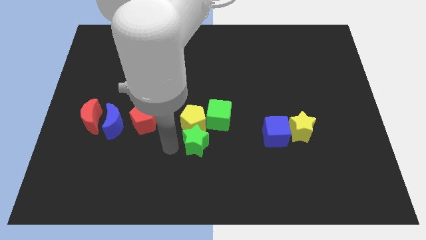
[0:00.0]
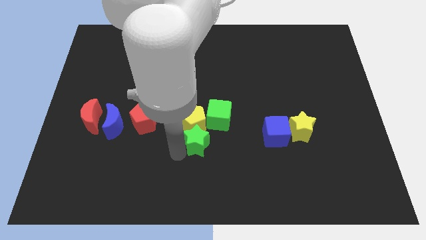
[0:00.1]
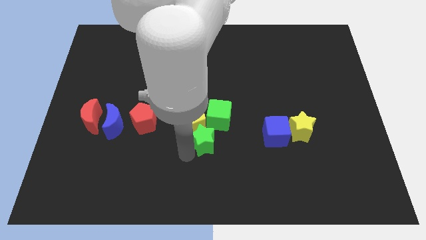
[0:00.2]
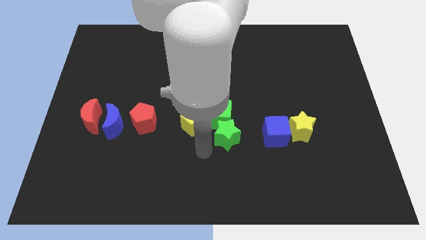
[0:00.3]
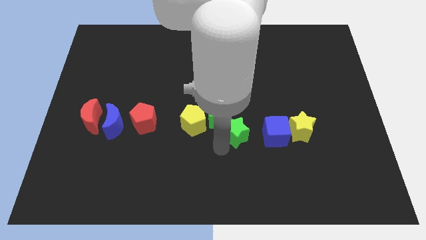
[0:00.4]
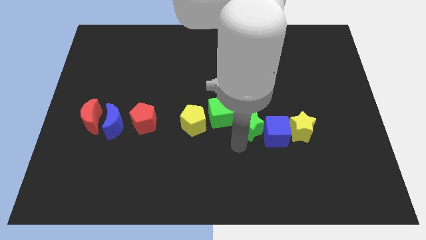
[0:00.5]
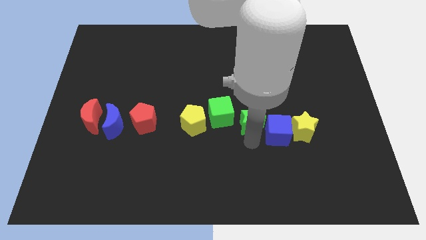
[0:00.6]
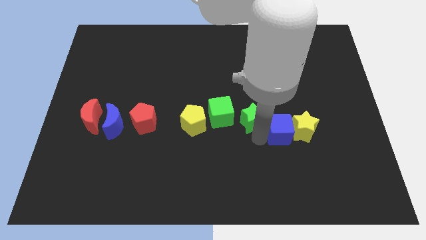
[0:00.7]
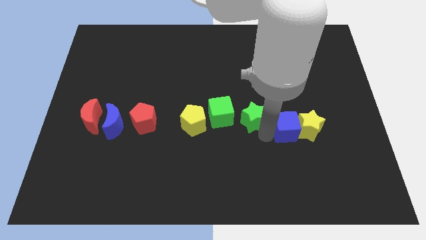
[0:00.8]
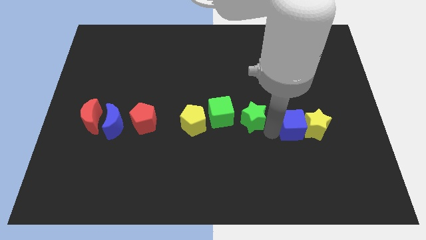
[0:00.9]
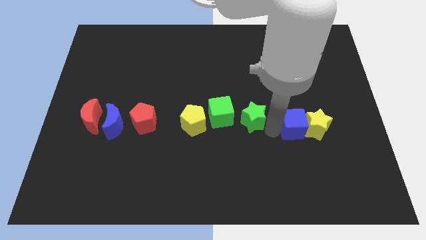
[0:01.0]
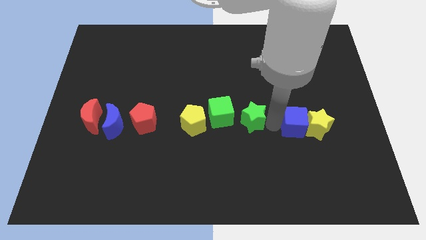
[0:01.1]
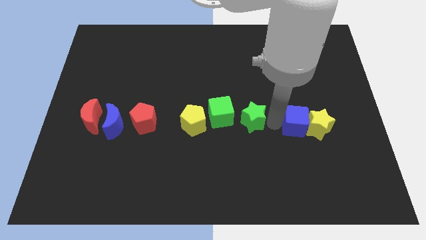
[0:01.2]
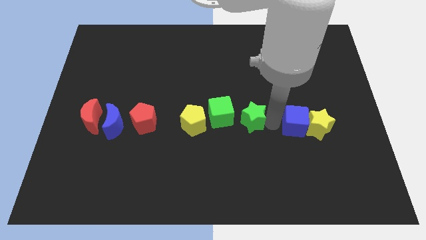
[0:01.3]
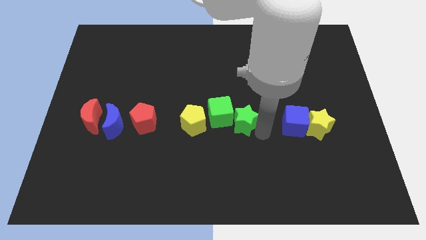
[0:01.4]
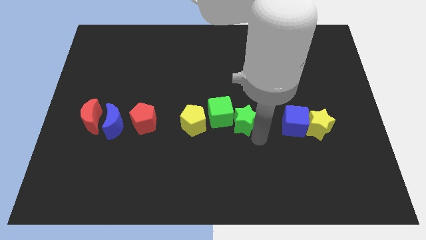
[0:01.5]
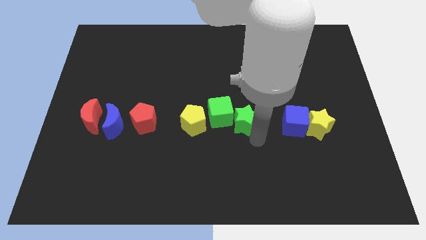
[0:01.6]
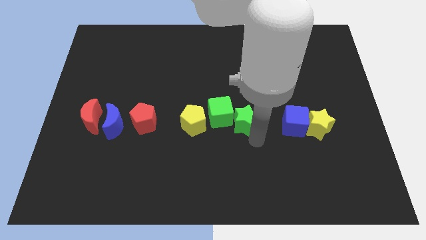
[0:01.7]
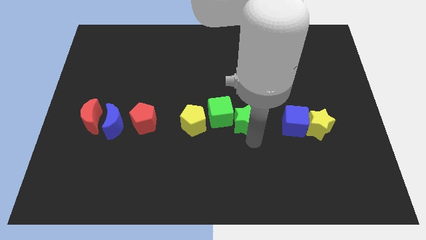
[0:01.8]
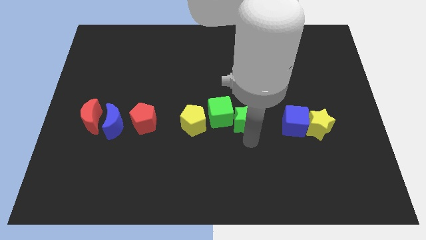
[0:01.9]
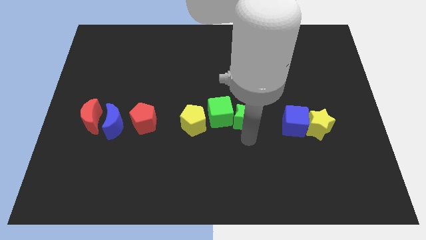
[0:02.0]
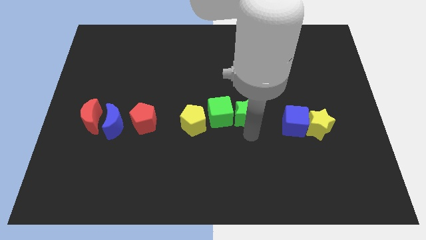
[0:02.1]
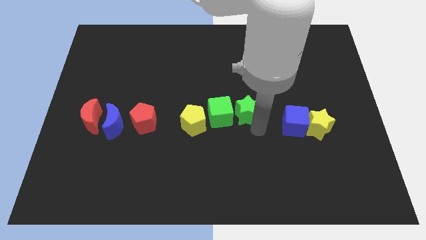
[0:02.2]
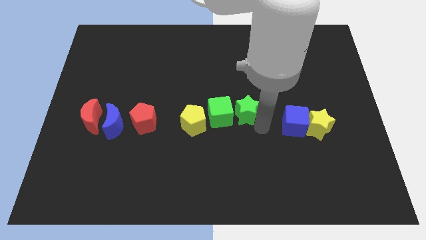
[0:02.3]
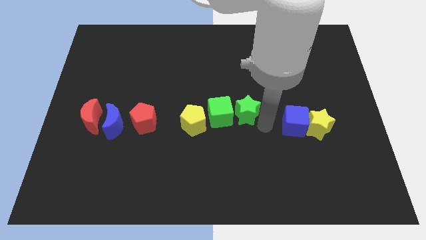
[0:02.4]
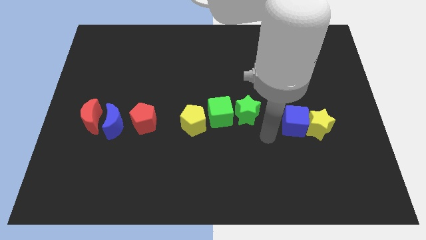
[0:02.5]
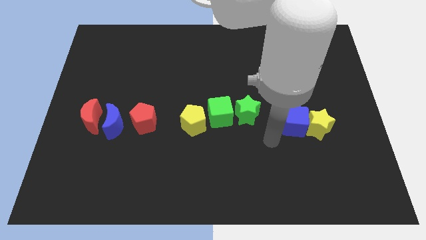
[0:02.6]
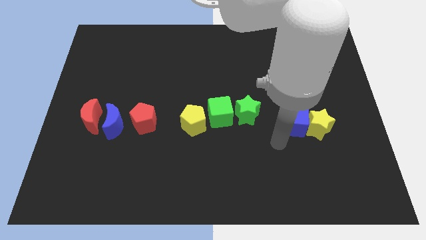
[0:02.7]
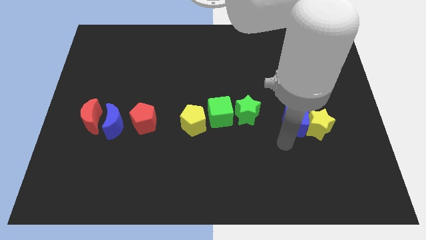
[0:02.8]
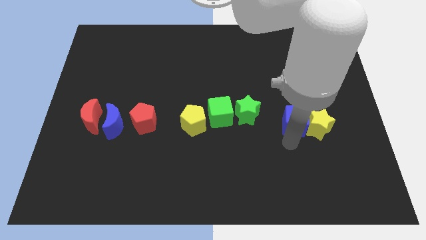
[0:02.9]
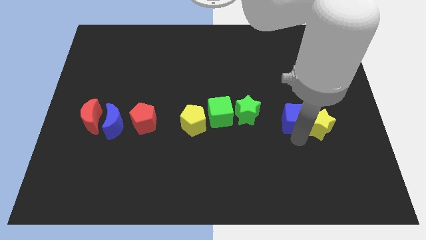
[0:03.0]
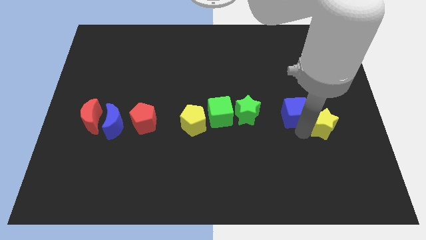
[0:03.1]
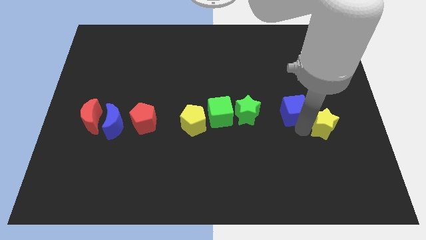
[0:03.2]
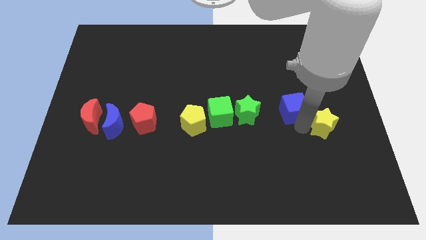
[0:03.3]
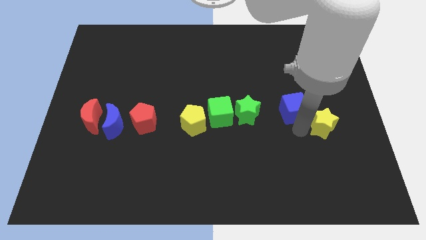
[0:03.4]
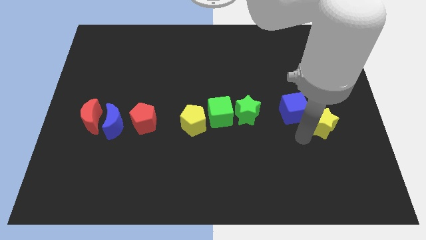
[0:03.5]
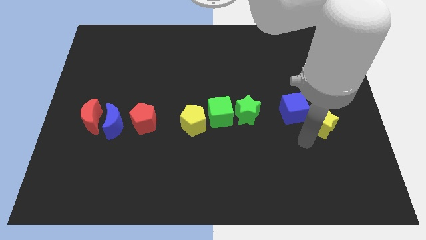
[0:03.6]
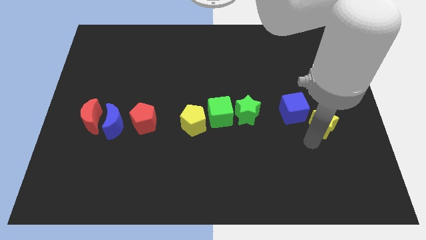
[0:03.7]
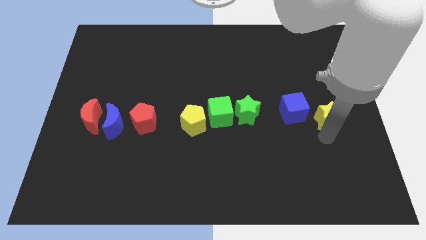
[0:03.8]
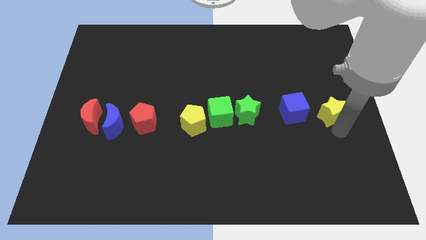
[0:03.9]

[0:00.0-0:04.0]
place the green star right to the green cube to form a horizontal line

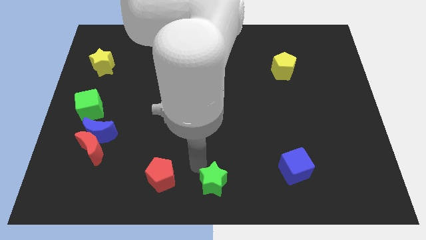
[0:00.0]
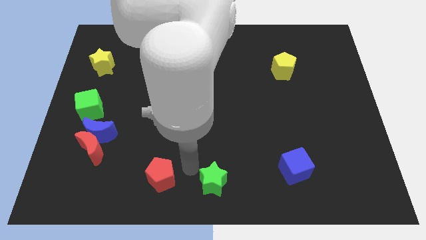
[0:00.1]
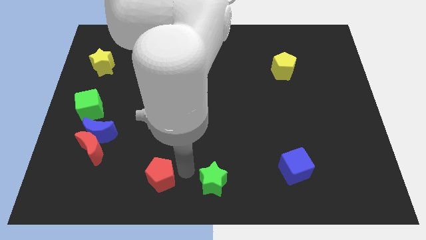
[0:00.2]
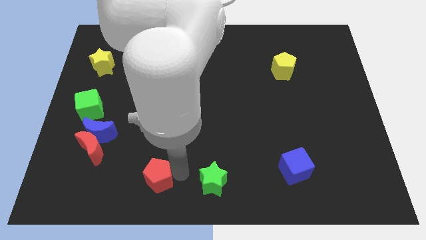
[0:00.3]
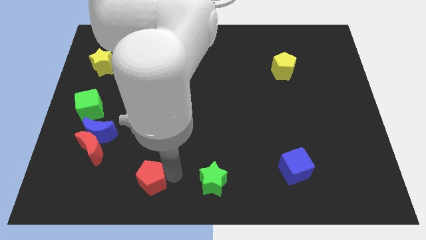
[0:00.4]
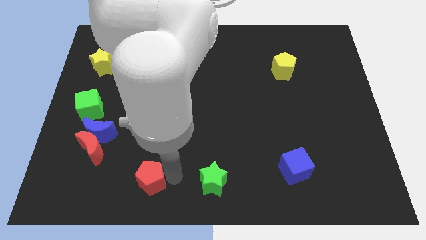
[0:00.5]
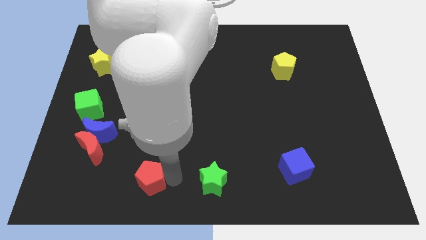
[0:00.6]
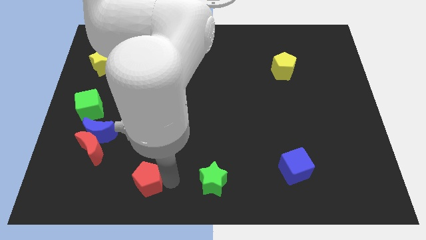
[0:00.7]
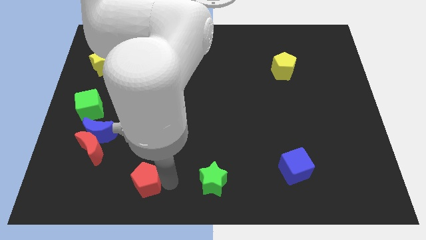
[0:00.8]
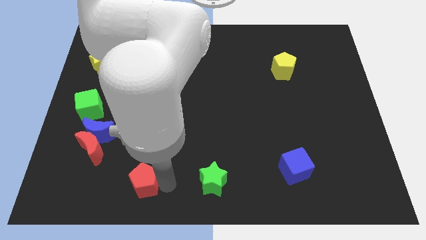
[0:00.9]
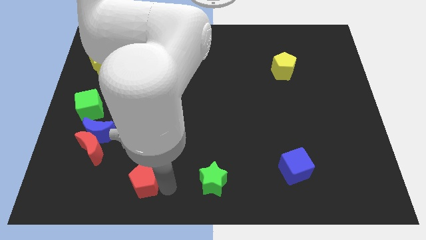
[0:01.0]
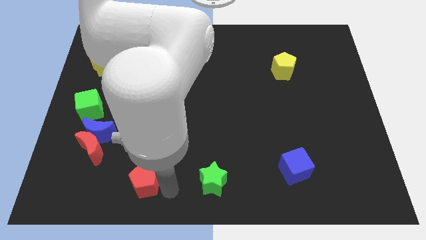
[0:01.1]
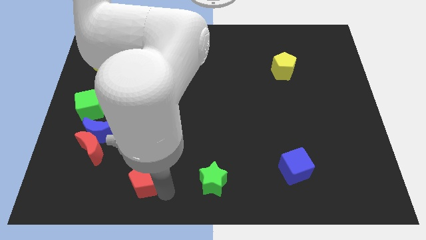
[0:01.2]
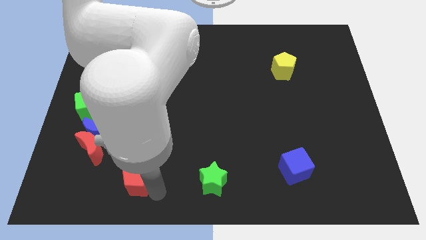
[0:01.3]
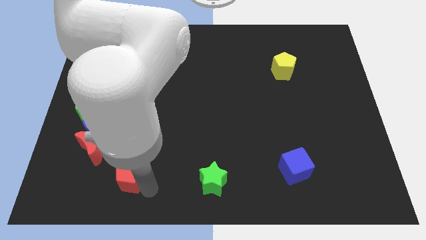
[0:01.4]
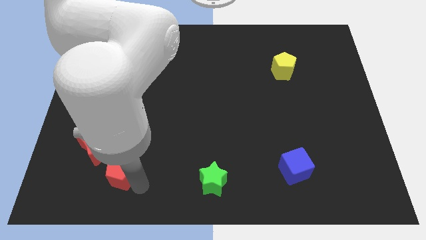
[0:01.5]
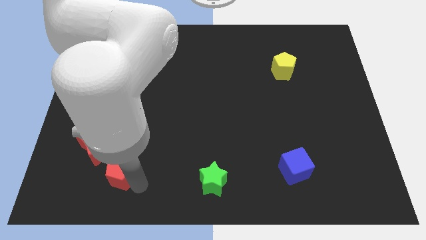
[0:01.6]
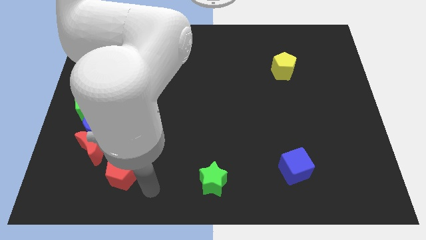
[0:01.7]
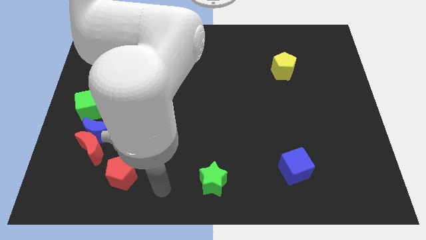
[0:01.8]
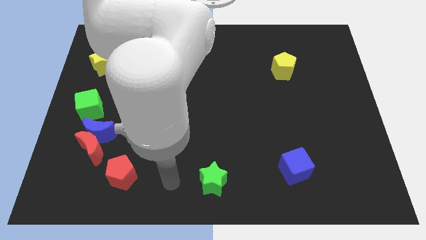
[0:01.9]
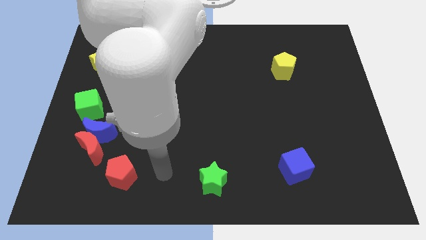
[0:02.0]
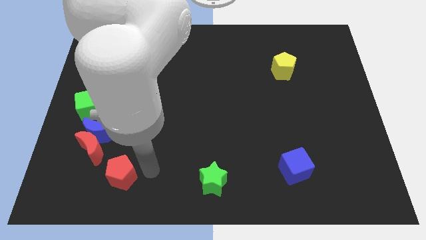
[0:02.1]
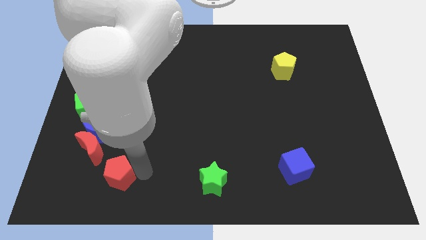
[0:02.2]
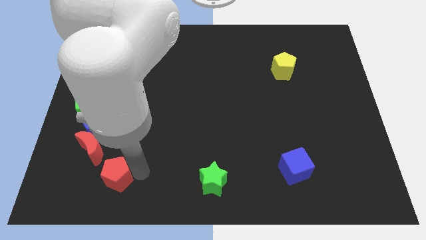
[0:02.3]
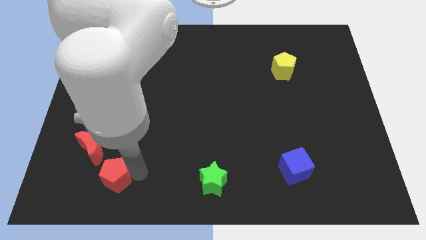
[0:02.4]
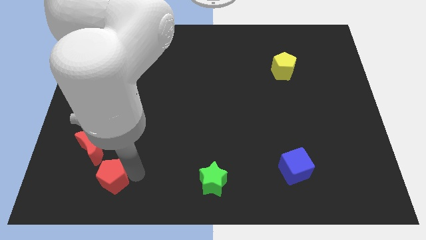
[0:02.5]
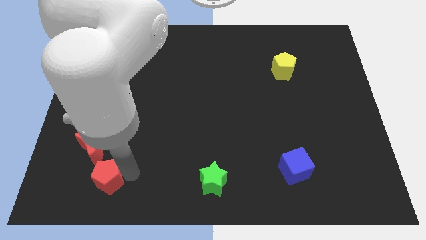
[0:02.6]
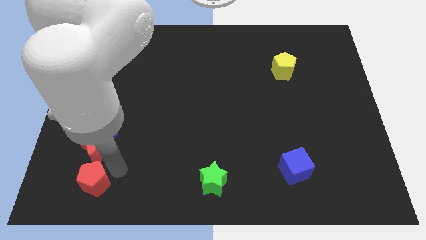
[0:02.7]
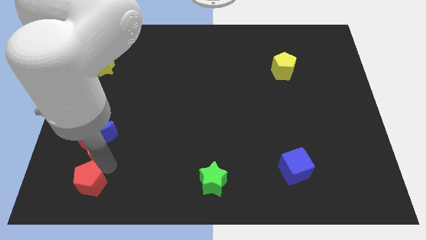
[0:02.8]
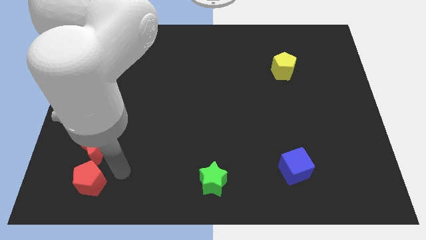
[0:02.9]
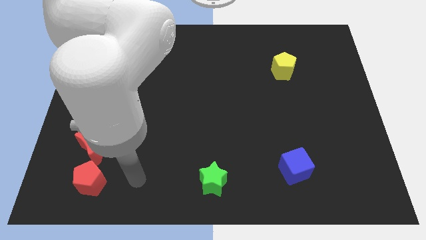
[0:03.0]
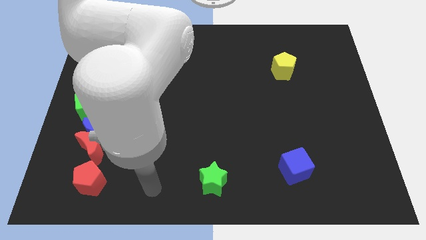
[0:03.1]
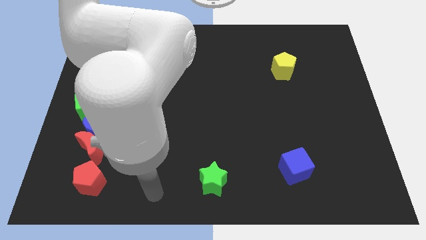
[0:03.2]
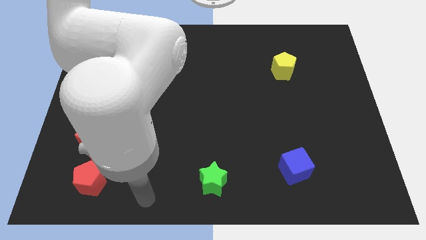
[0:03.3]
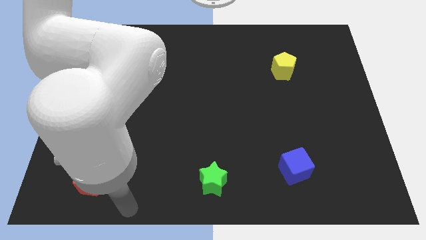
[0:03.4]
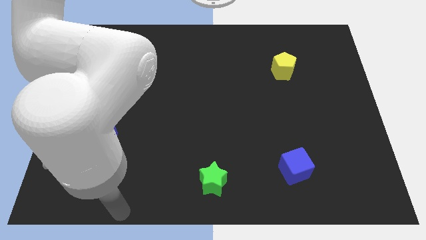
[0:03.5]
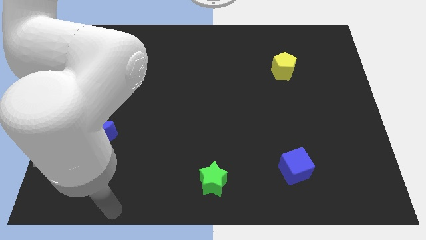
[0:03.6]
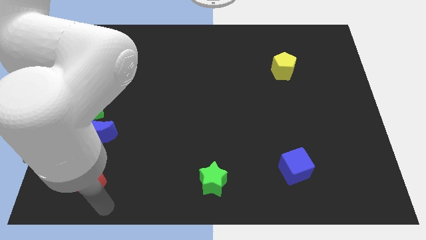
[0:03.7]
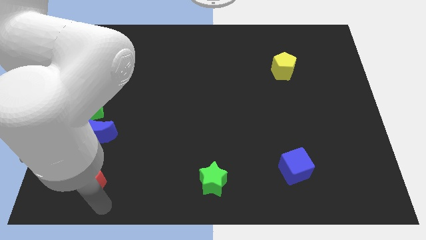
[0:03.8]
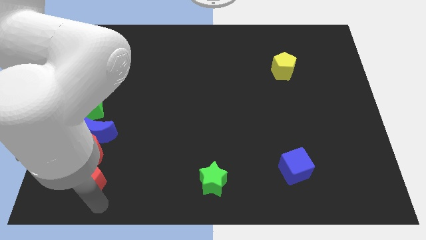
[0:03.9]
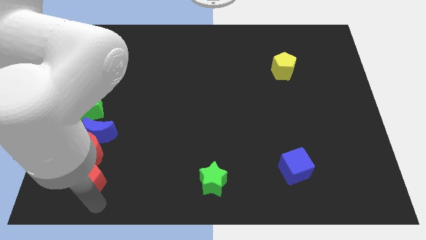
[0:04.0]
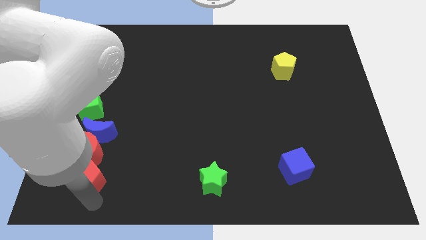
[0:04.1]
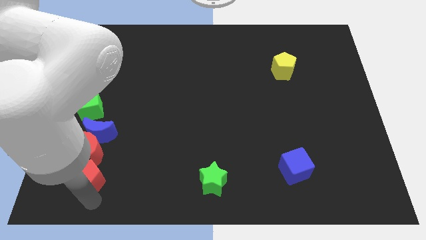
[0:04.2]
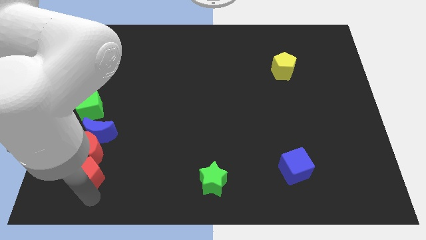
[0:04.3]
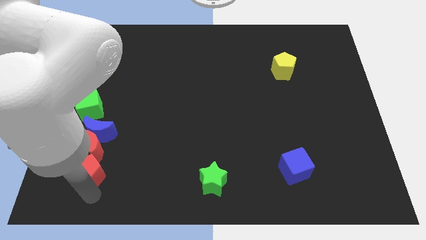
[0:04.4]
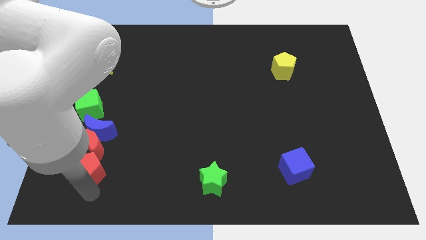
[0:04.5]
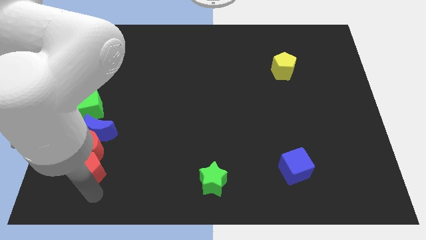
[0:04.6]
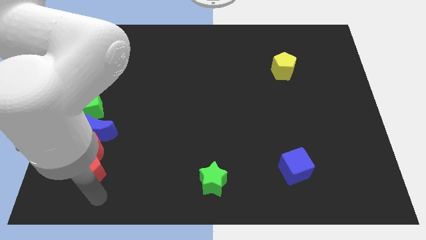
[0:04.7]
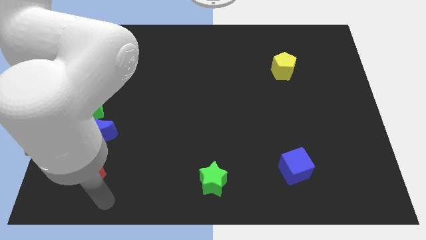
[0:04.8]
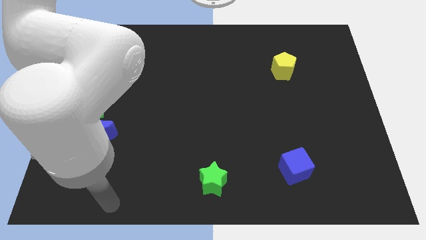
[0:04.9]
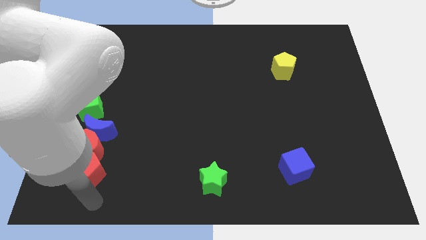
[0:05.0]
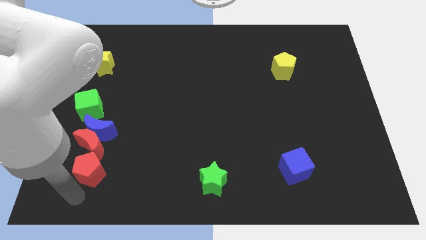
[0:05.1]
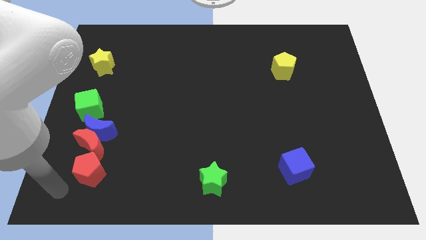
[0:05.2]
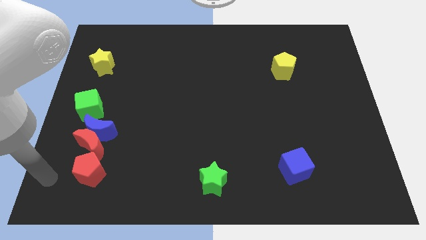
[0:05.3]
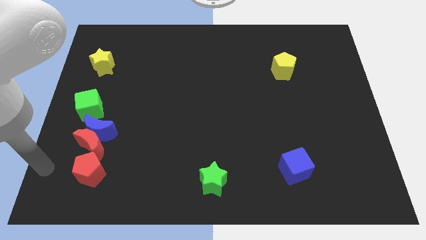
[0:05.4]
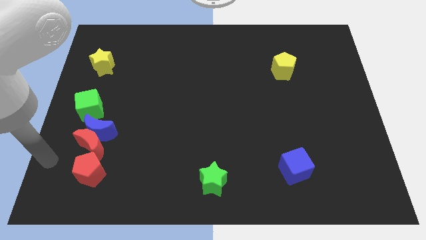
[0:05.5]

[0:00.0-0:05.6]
push the red pentagon to the bottom of red crescent
